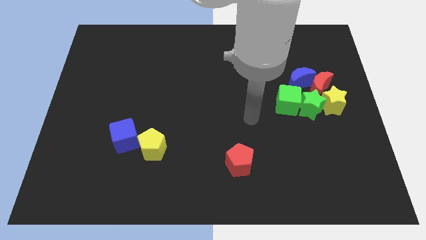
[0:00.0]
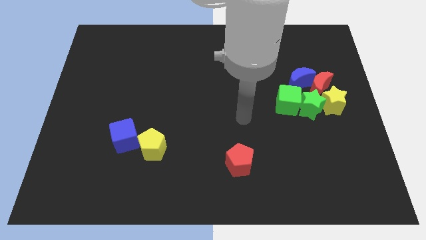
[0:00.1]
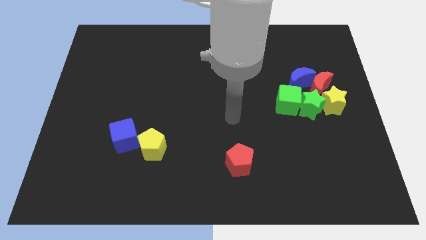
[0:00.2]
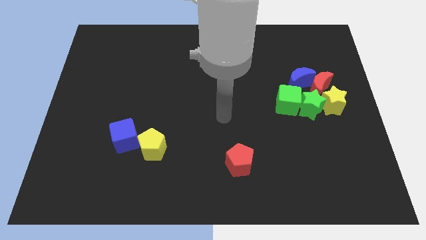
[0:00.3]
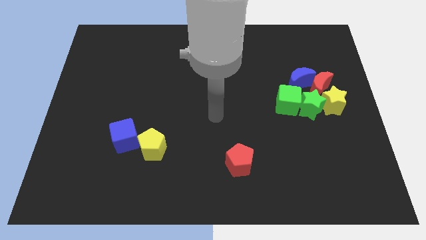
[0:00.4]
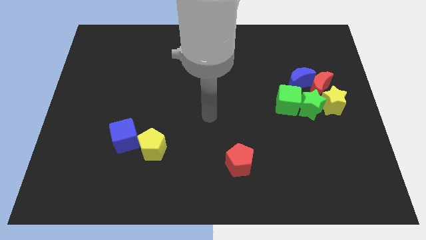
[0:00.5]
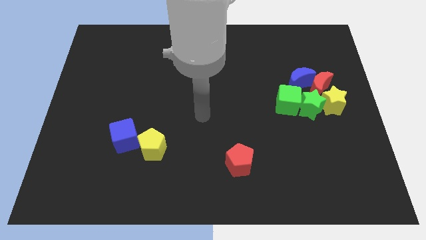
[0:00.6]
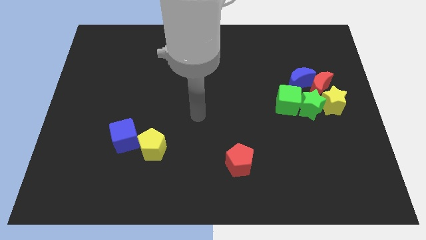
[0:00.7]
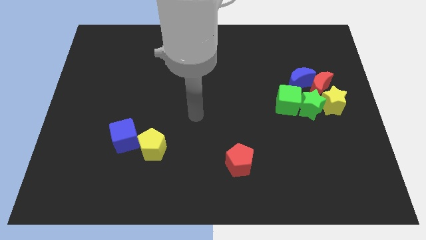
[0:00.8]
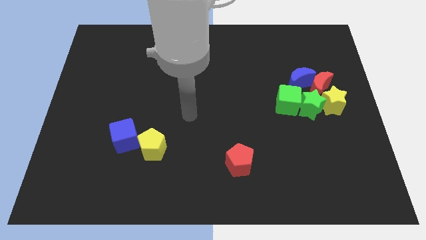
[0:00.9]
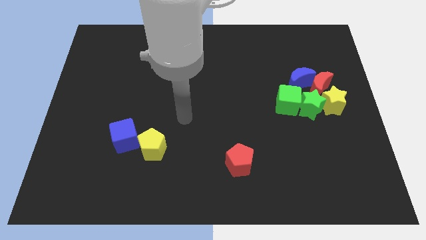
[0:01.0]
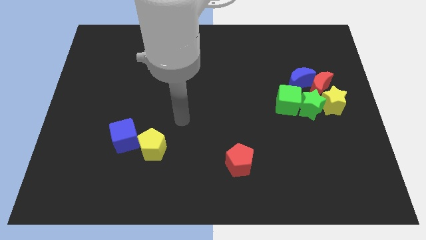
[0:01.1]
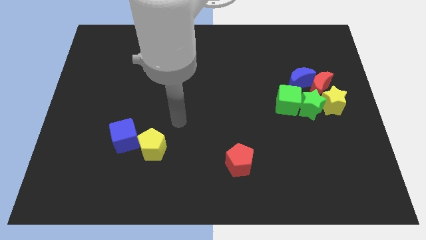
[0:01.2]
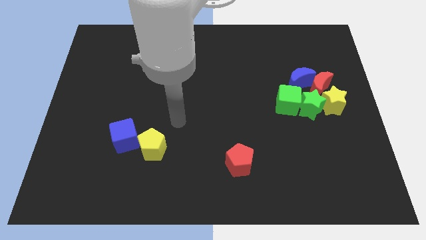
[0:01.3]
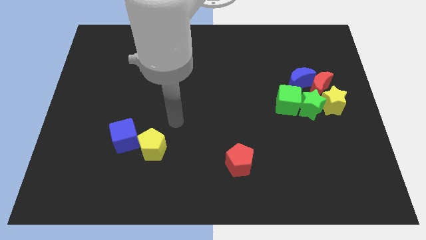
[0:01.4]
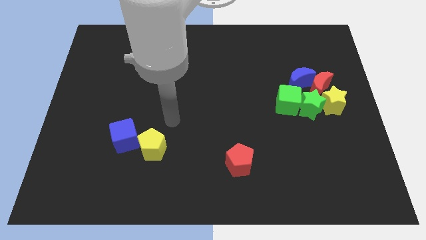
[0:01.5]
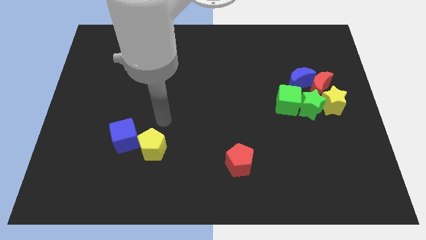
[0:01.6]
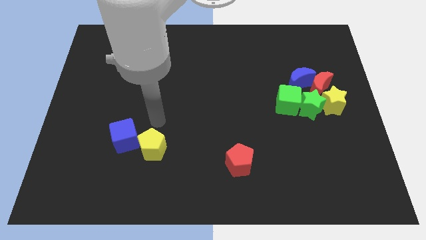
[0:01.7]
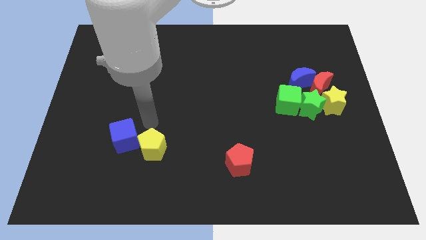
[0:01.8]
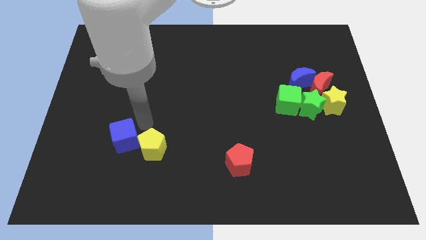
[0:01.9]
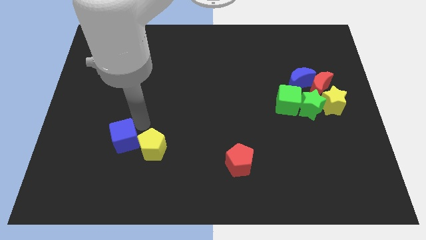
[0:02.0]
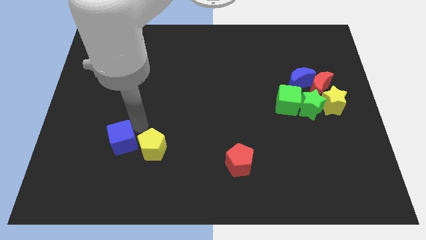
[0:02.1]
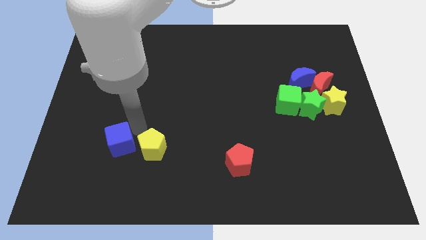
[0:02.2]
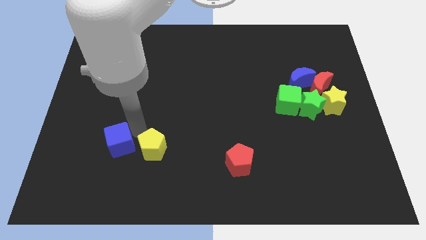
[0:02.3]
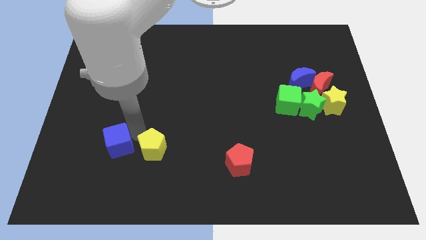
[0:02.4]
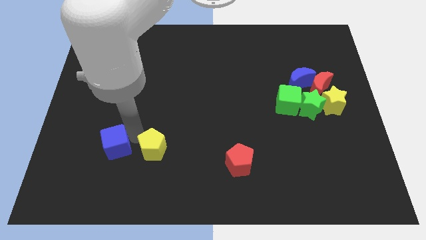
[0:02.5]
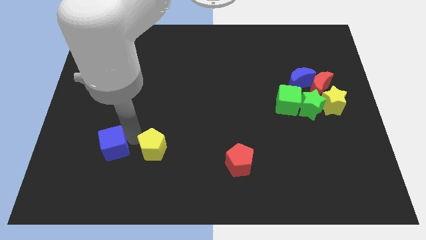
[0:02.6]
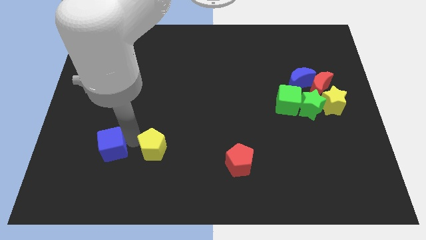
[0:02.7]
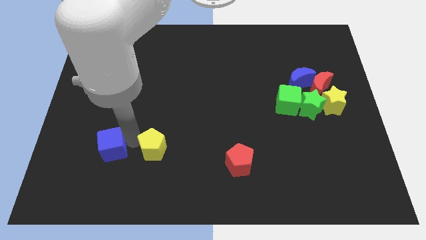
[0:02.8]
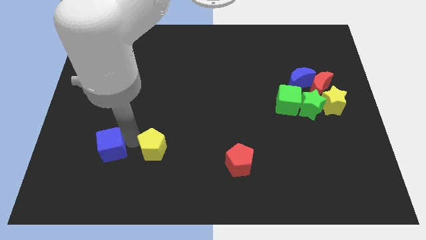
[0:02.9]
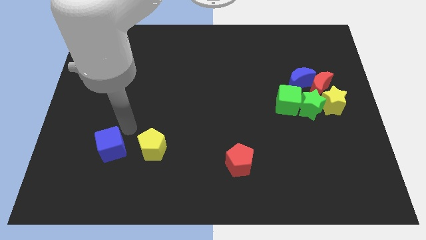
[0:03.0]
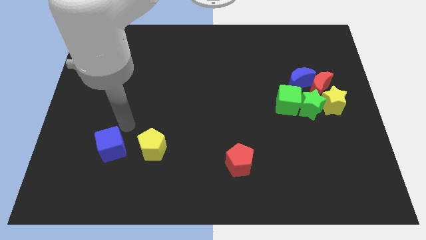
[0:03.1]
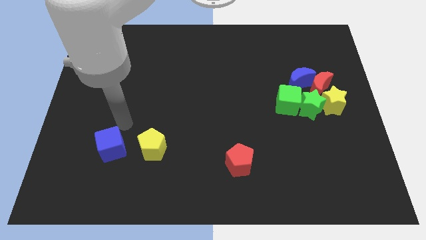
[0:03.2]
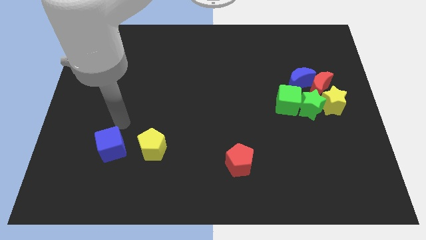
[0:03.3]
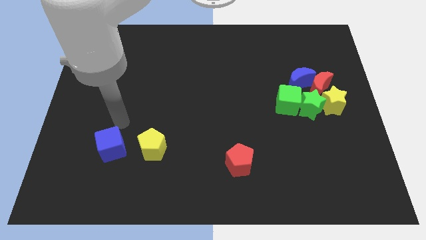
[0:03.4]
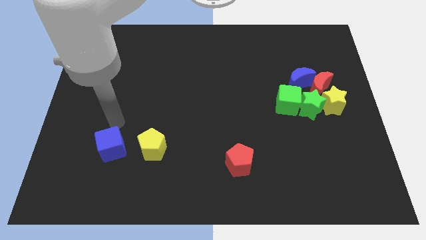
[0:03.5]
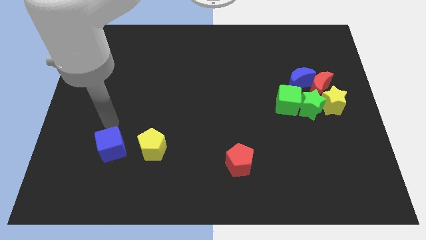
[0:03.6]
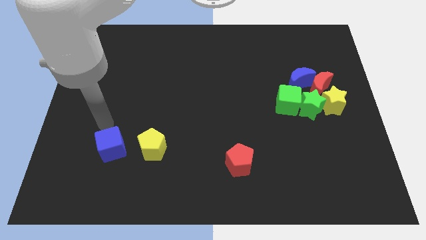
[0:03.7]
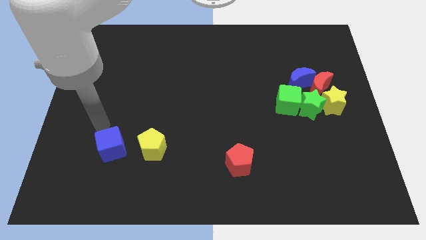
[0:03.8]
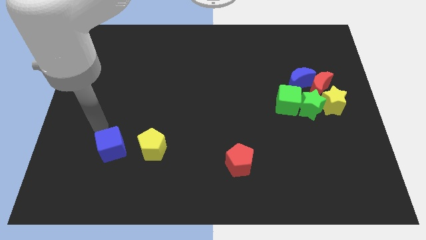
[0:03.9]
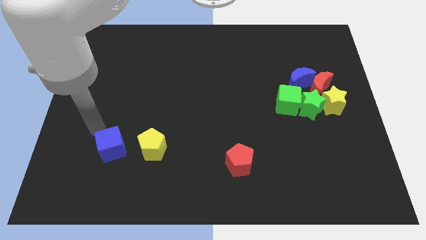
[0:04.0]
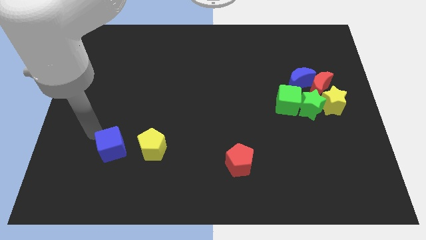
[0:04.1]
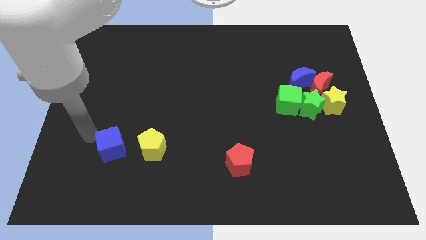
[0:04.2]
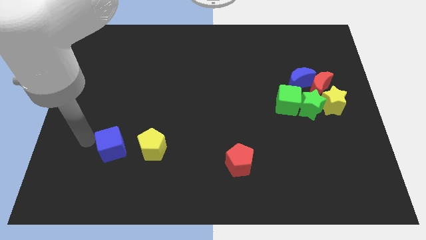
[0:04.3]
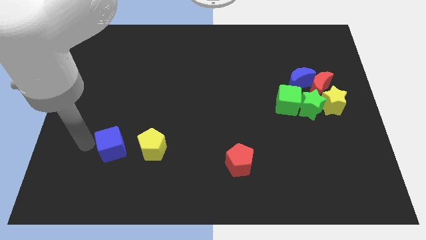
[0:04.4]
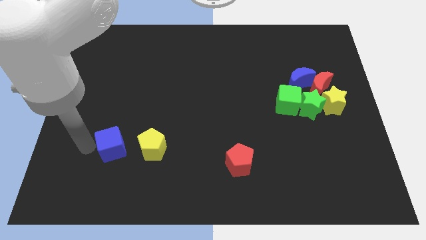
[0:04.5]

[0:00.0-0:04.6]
place the blue cube to the left of the yellow pentagon

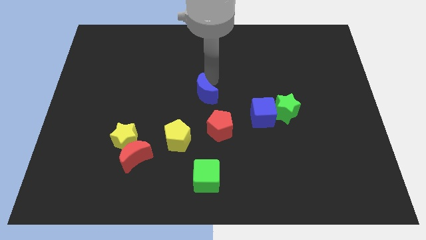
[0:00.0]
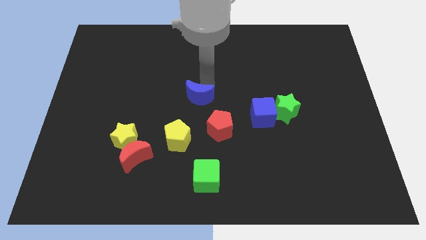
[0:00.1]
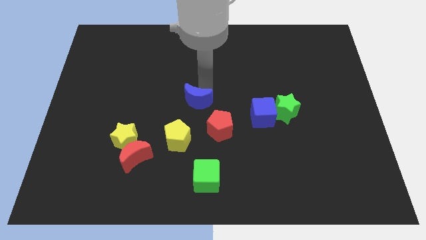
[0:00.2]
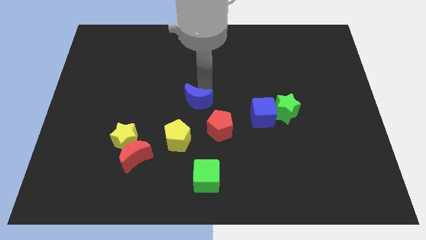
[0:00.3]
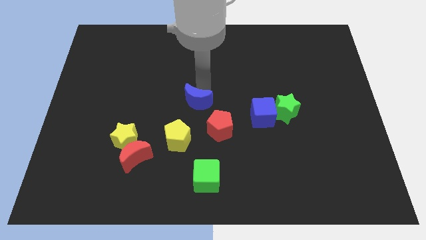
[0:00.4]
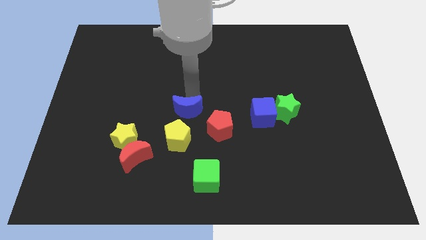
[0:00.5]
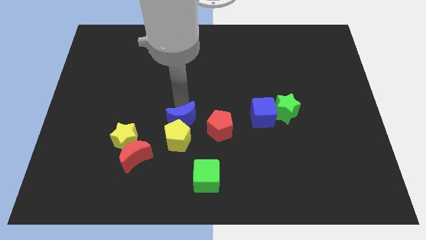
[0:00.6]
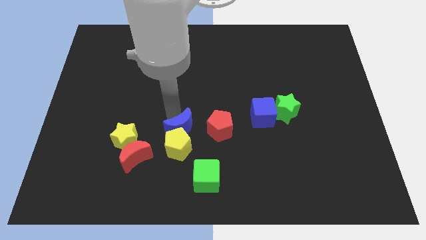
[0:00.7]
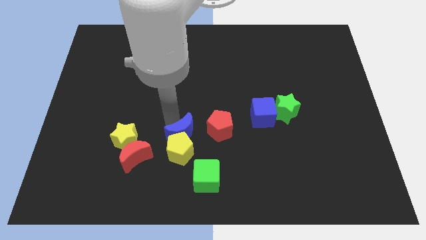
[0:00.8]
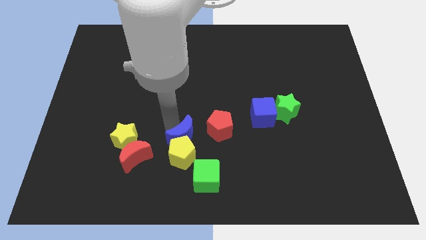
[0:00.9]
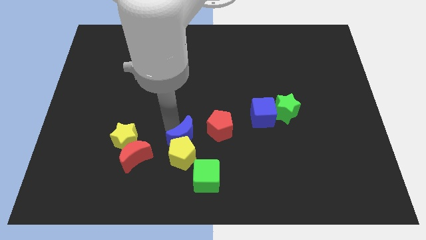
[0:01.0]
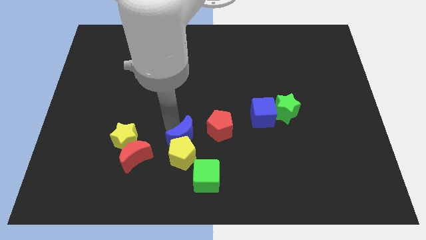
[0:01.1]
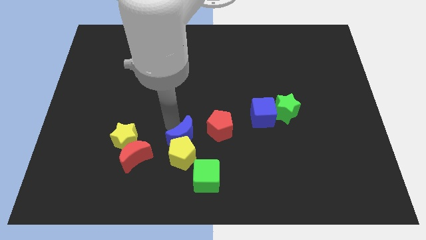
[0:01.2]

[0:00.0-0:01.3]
push the blue crescent into the yellow pentagon

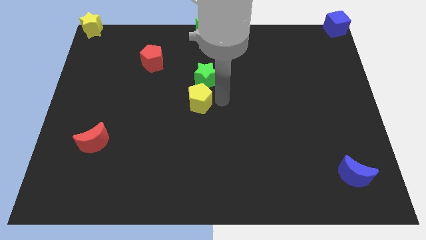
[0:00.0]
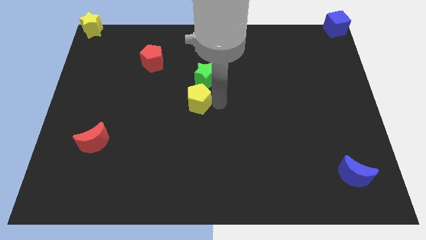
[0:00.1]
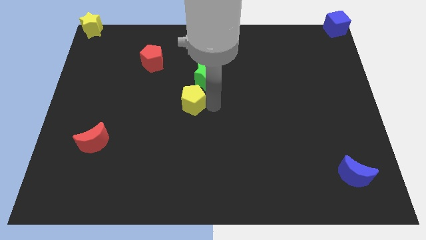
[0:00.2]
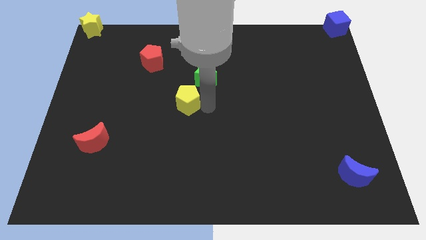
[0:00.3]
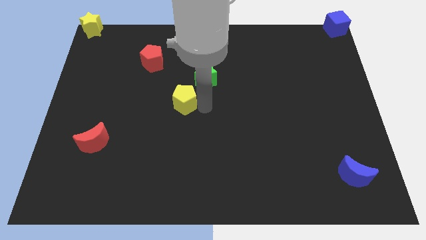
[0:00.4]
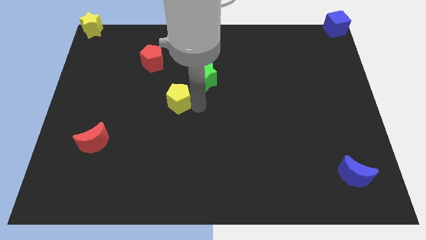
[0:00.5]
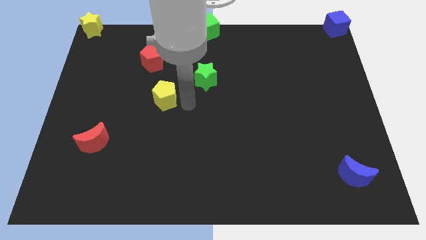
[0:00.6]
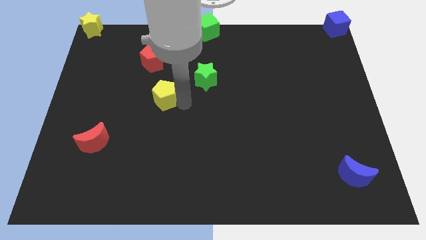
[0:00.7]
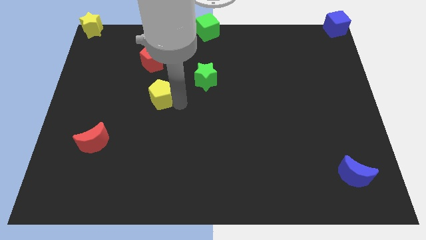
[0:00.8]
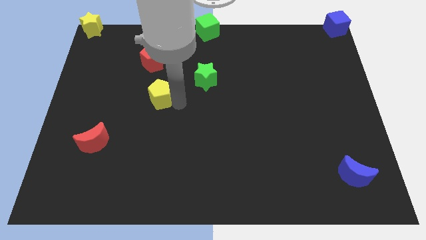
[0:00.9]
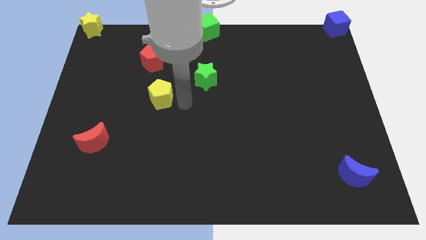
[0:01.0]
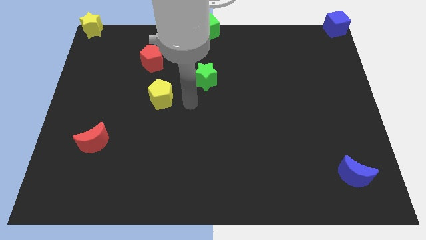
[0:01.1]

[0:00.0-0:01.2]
slightly move the yellow pentagon below the red pentagon

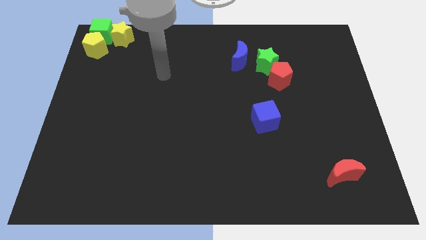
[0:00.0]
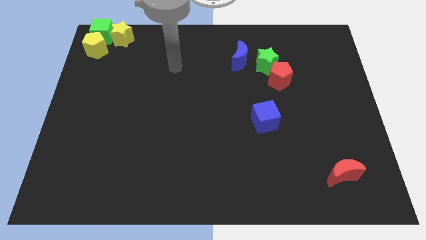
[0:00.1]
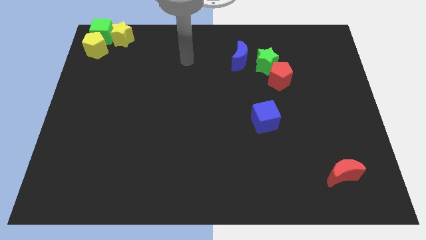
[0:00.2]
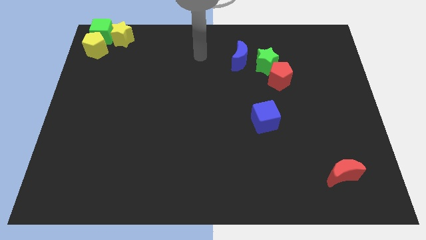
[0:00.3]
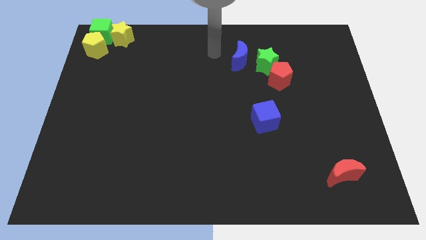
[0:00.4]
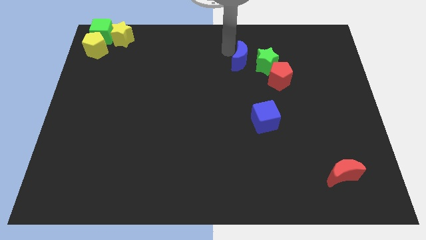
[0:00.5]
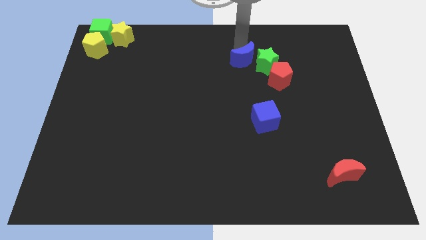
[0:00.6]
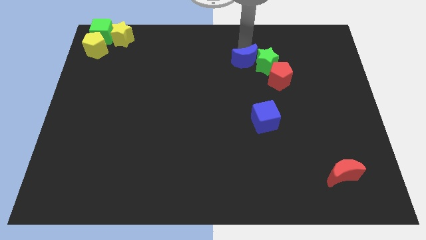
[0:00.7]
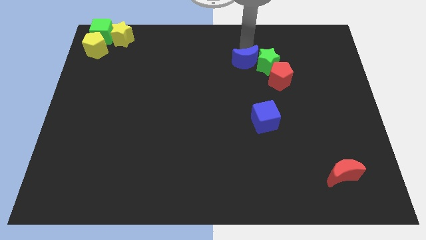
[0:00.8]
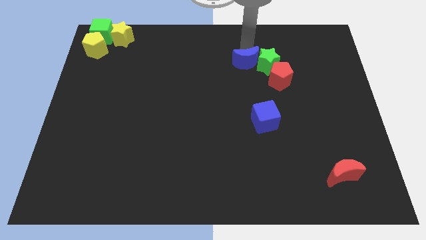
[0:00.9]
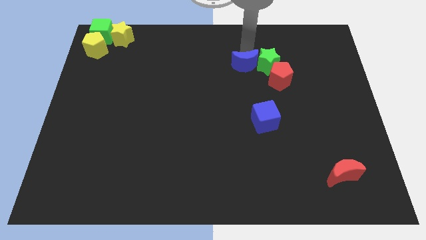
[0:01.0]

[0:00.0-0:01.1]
push the blue moon into the left side of the green star

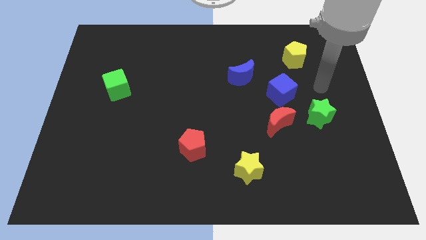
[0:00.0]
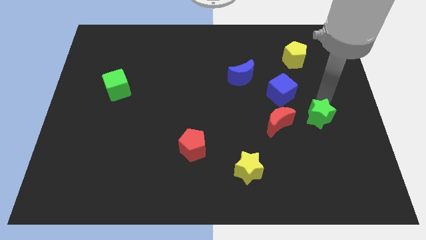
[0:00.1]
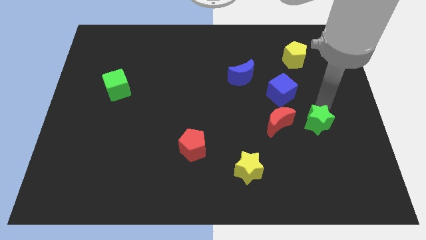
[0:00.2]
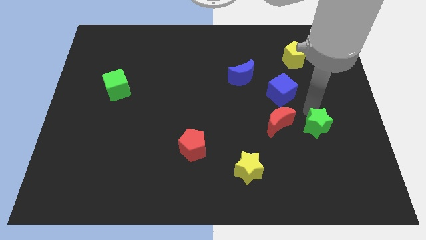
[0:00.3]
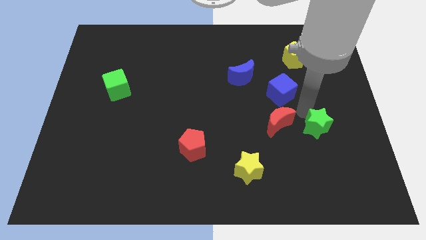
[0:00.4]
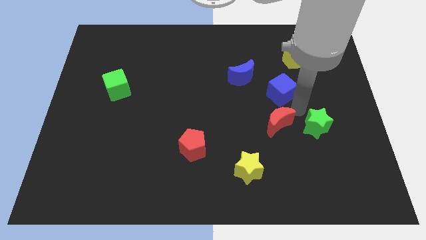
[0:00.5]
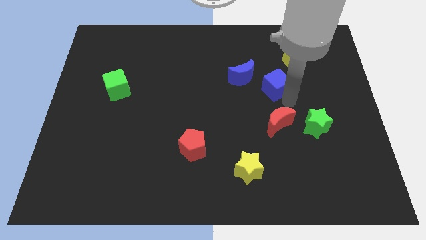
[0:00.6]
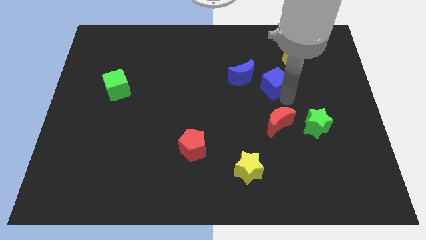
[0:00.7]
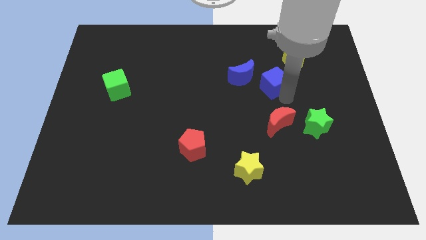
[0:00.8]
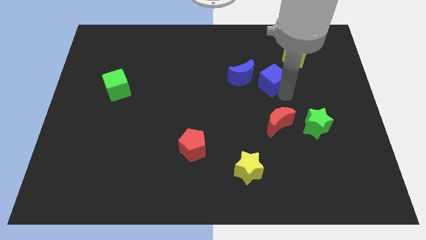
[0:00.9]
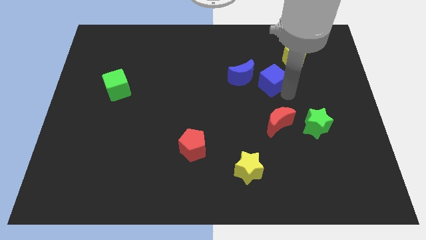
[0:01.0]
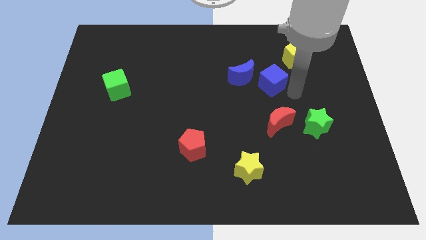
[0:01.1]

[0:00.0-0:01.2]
move the blue cube slightly towards the blue crescent
